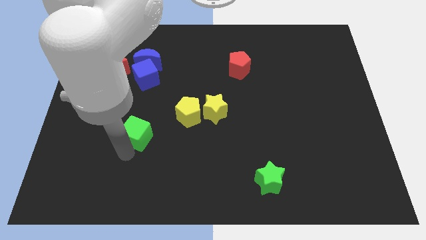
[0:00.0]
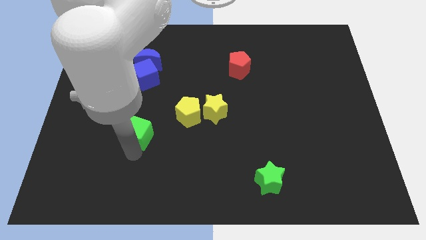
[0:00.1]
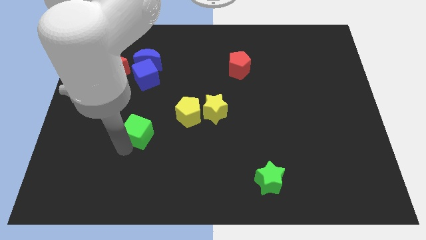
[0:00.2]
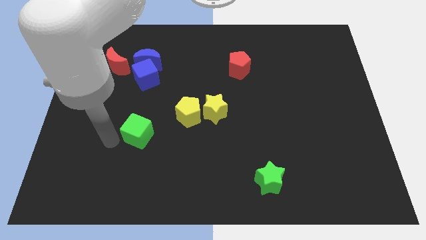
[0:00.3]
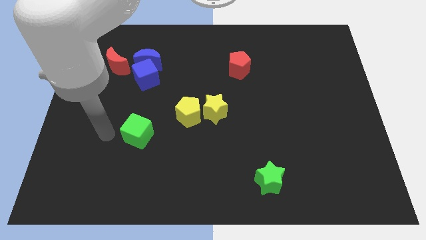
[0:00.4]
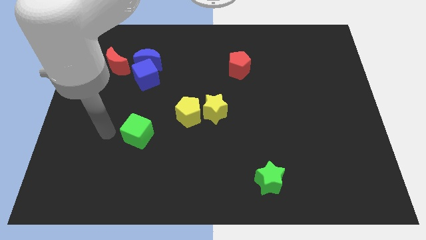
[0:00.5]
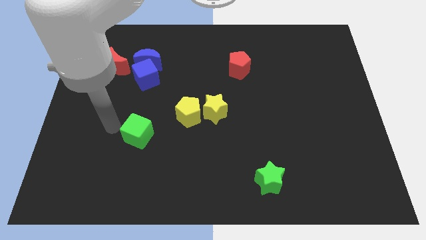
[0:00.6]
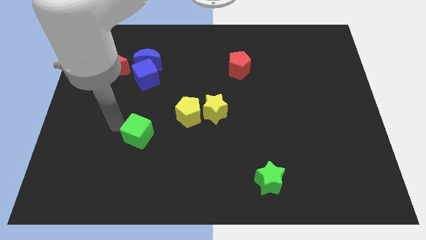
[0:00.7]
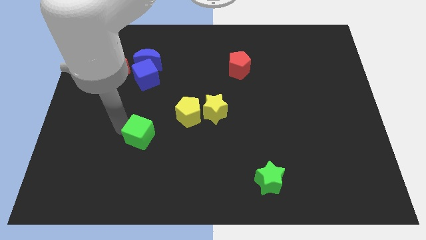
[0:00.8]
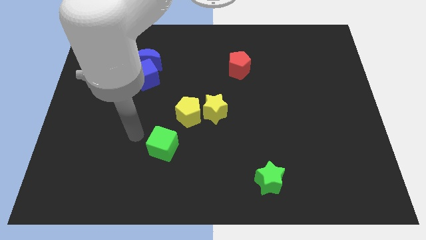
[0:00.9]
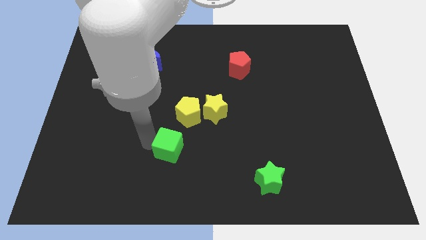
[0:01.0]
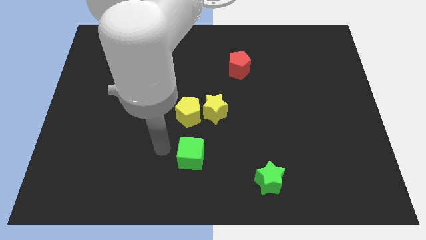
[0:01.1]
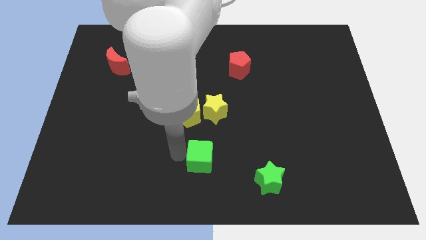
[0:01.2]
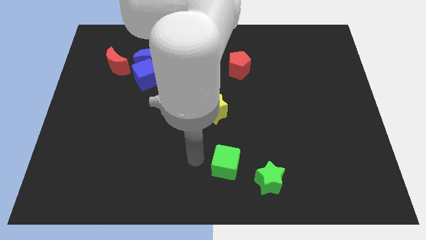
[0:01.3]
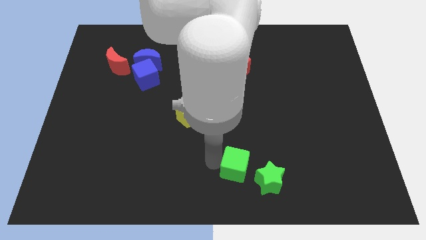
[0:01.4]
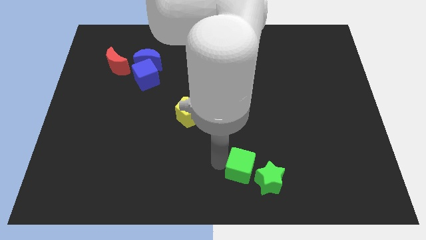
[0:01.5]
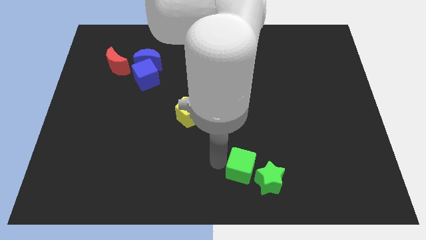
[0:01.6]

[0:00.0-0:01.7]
push the green cube towards the green star

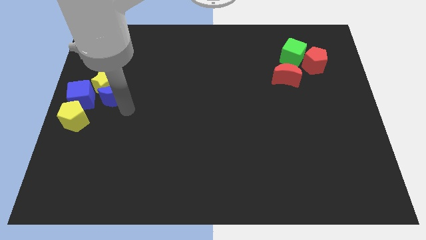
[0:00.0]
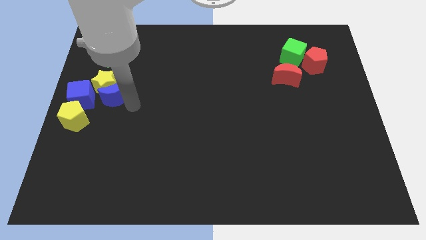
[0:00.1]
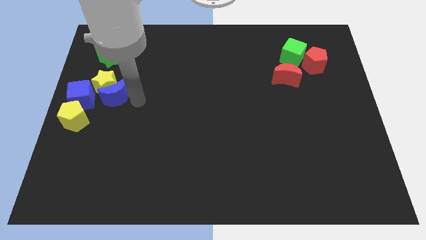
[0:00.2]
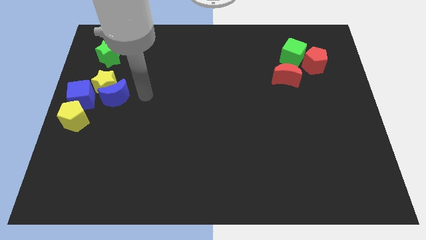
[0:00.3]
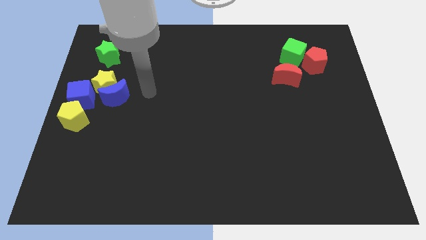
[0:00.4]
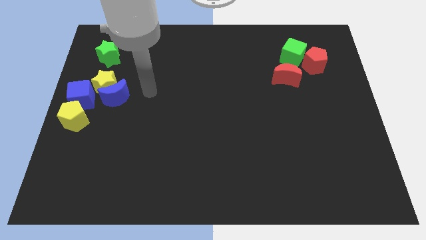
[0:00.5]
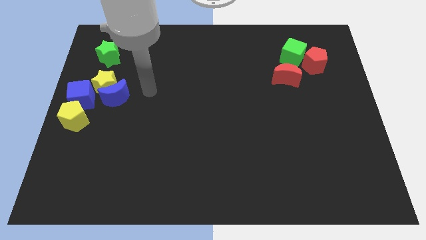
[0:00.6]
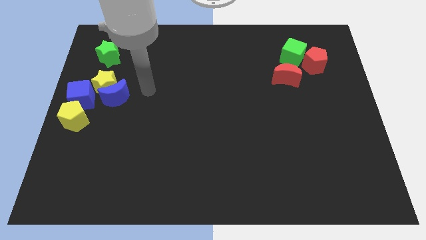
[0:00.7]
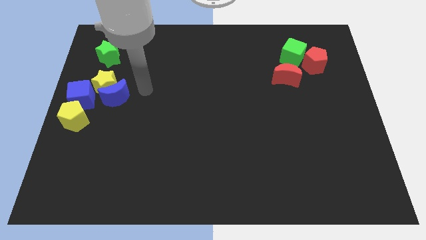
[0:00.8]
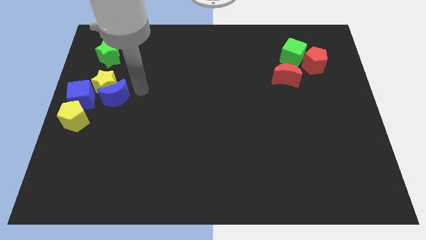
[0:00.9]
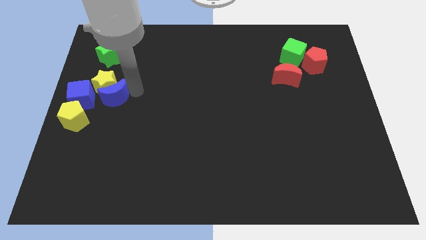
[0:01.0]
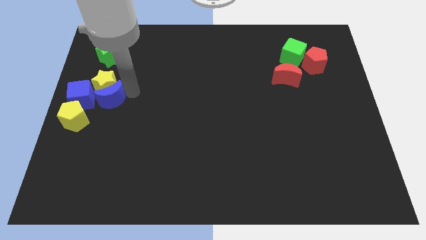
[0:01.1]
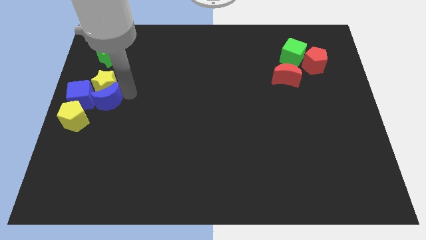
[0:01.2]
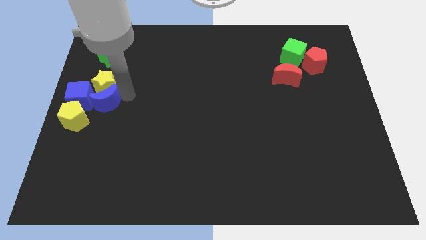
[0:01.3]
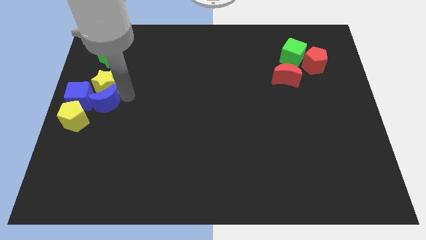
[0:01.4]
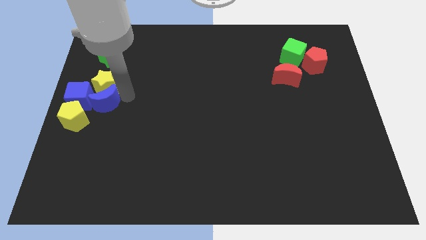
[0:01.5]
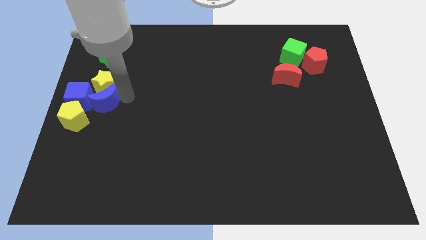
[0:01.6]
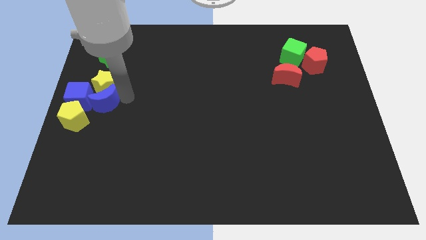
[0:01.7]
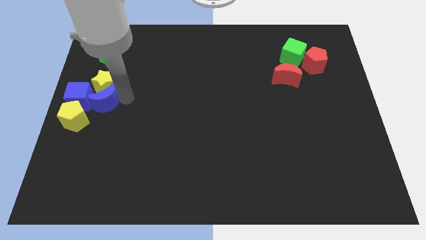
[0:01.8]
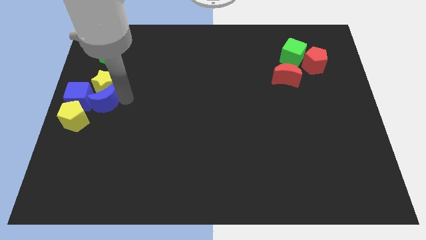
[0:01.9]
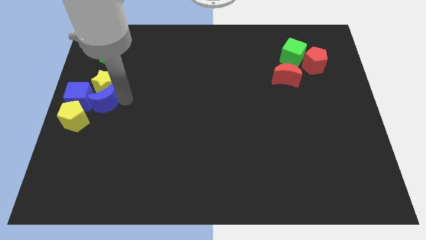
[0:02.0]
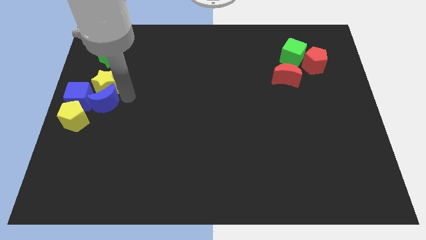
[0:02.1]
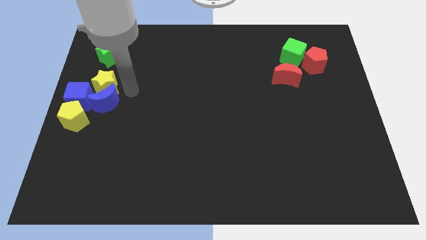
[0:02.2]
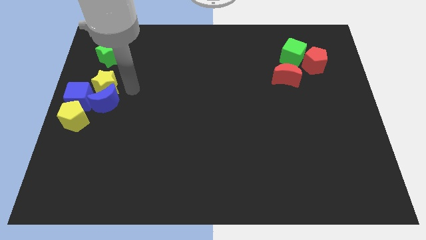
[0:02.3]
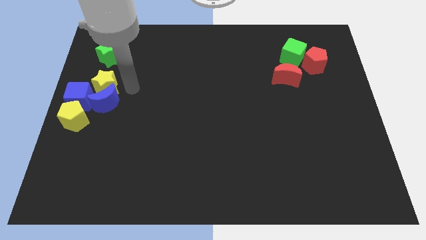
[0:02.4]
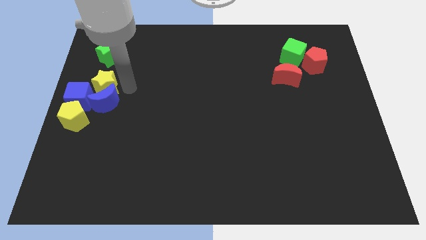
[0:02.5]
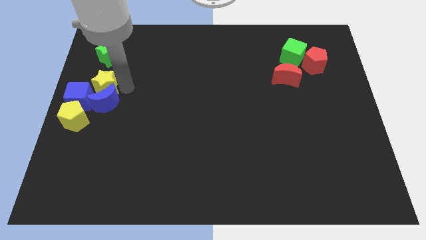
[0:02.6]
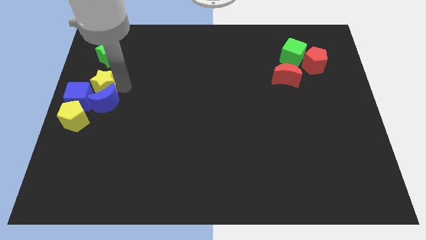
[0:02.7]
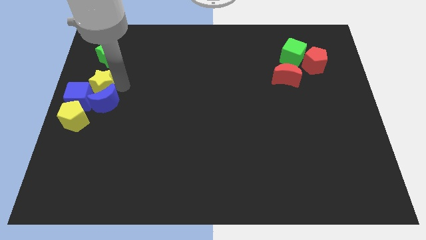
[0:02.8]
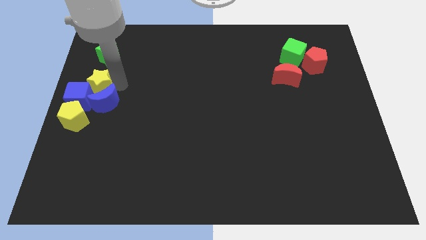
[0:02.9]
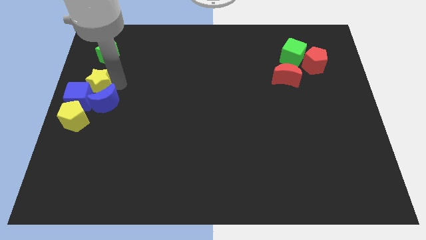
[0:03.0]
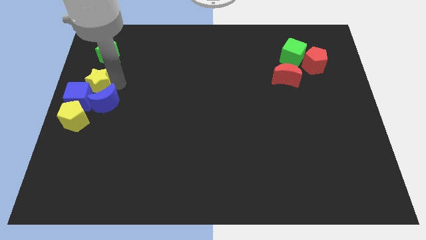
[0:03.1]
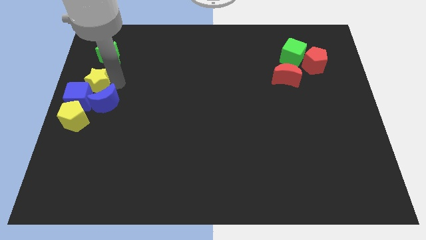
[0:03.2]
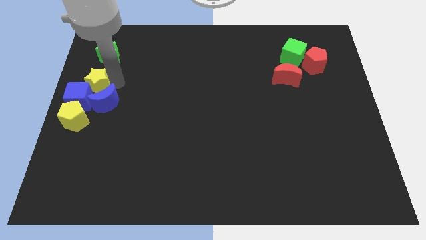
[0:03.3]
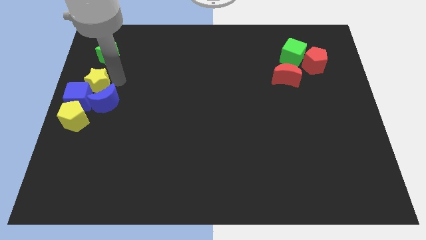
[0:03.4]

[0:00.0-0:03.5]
push the blue crescent into the blue cube

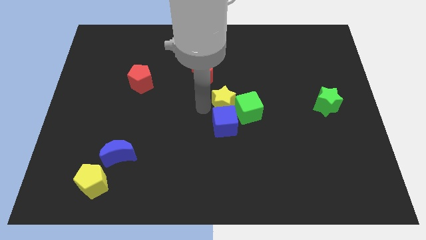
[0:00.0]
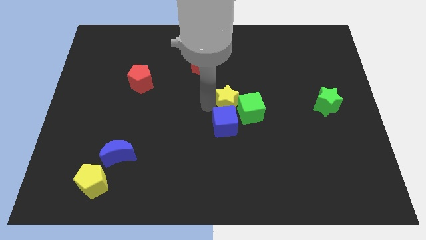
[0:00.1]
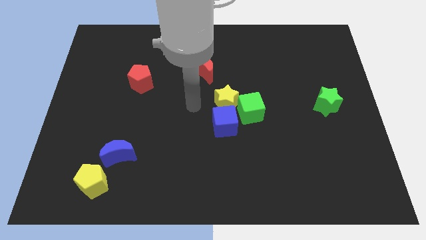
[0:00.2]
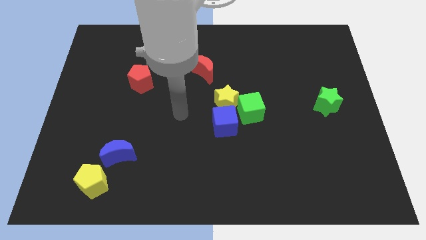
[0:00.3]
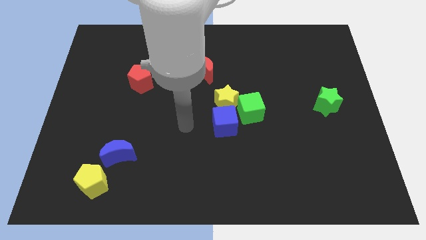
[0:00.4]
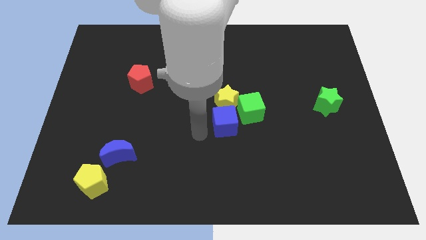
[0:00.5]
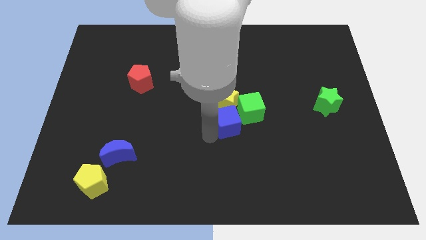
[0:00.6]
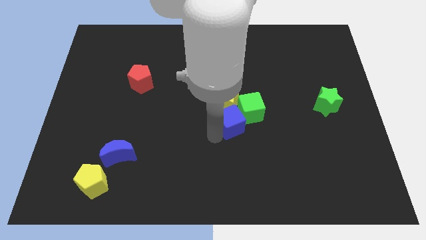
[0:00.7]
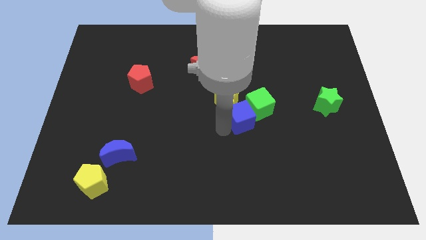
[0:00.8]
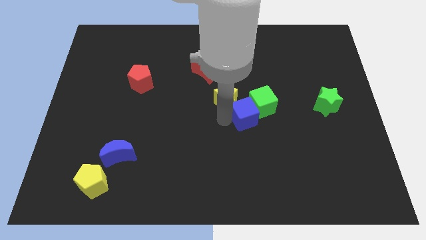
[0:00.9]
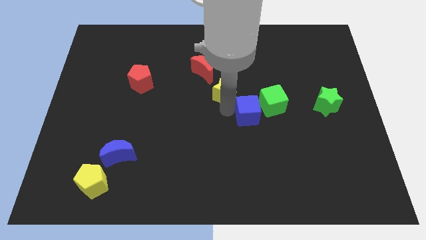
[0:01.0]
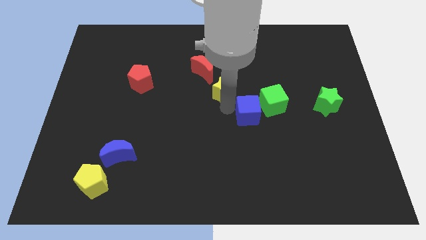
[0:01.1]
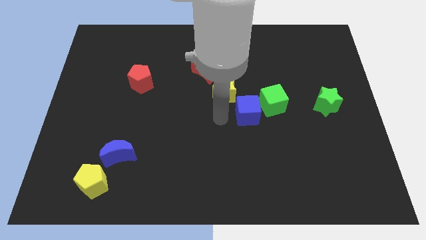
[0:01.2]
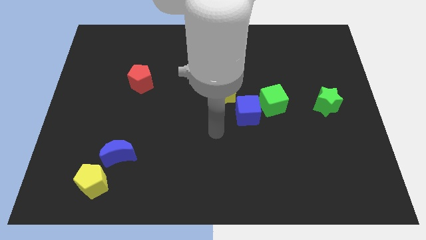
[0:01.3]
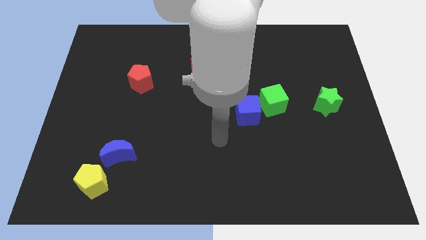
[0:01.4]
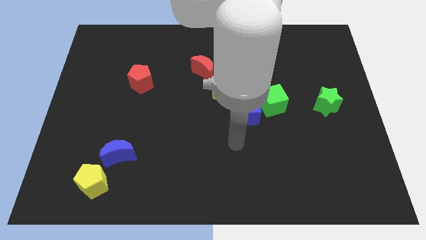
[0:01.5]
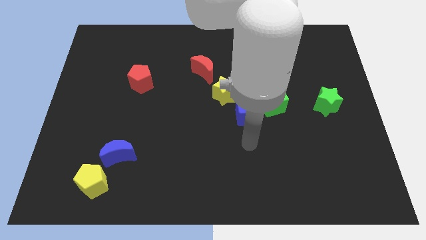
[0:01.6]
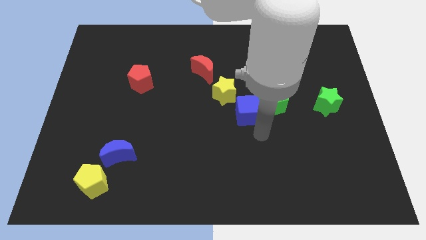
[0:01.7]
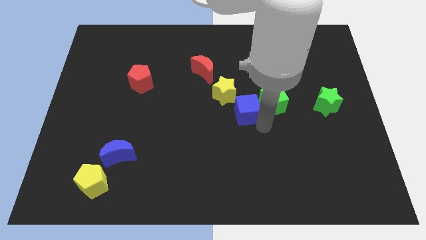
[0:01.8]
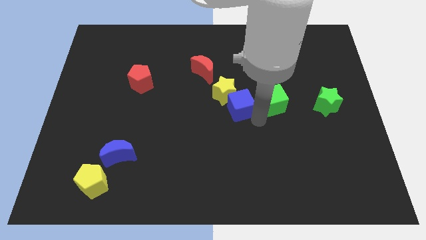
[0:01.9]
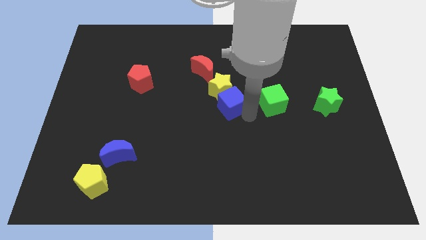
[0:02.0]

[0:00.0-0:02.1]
move the blue cube into the yellow star

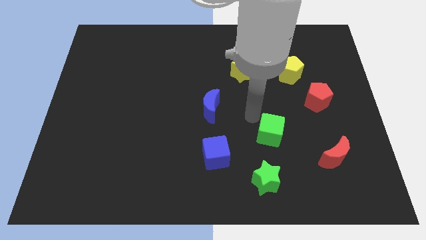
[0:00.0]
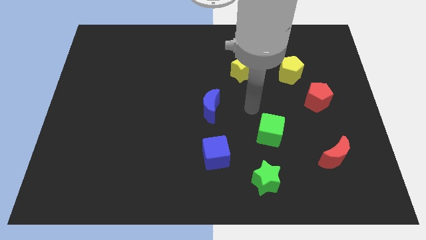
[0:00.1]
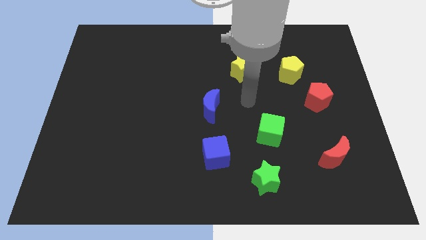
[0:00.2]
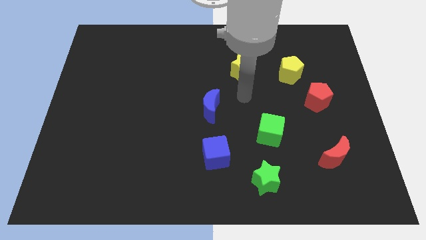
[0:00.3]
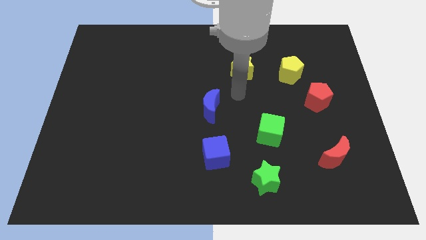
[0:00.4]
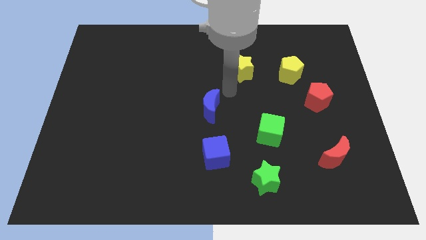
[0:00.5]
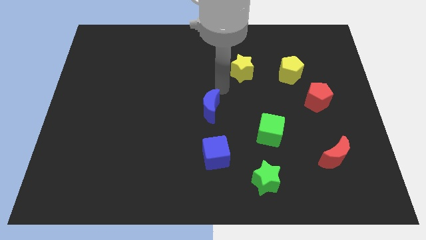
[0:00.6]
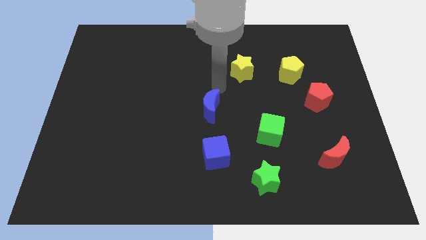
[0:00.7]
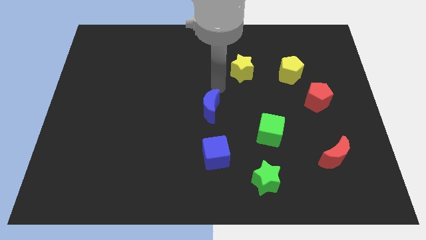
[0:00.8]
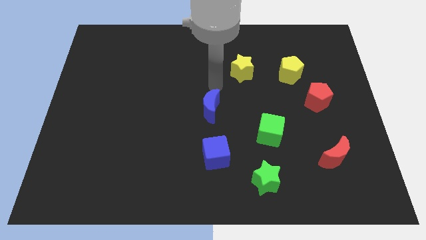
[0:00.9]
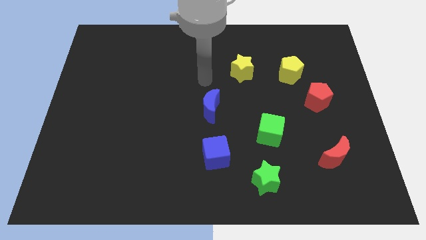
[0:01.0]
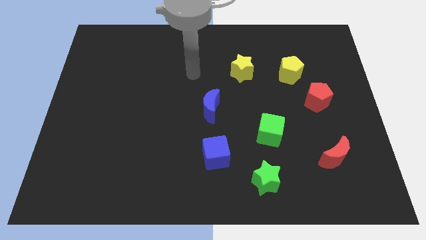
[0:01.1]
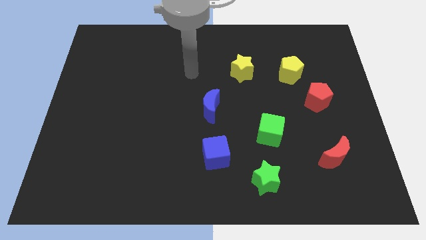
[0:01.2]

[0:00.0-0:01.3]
move your arm to the left side of the yellow star

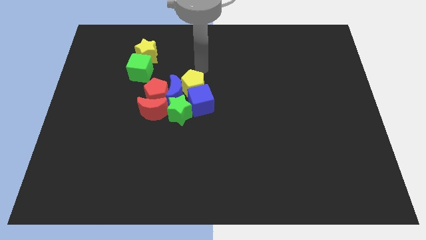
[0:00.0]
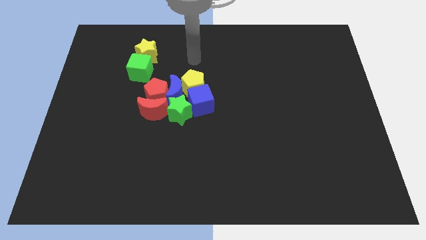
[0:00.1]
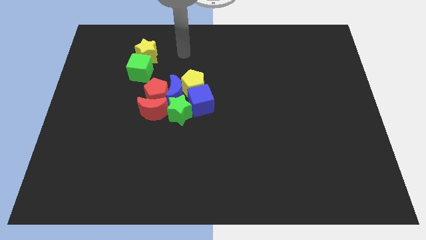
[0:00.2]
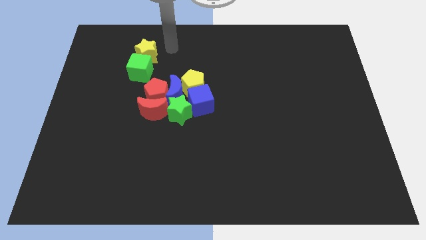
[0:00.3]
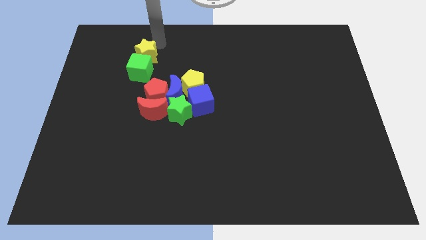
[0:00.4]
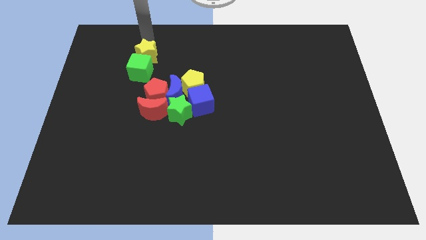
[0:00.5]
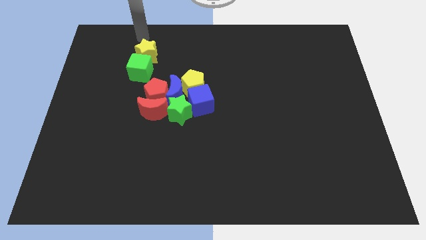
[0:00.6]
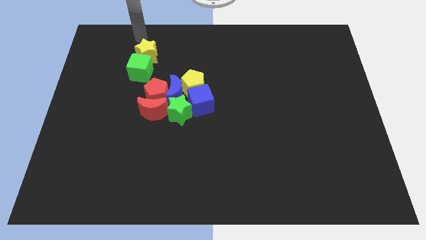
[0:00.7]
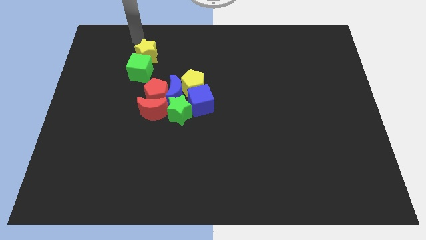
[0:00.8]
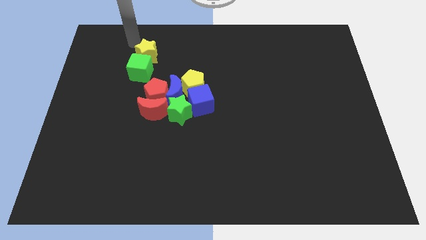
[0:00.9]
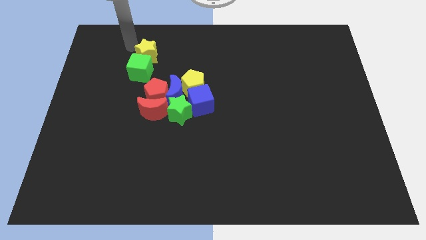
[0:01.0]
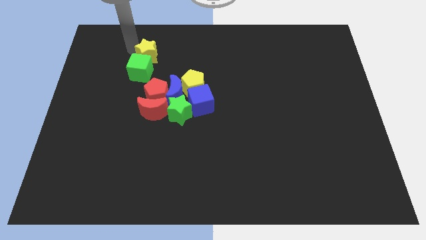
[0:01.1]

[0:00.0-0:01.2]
move your arm to the left of the yellow star
